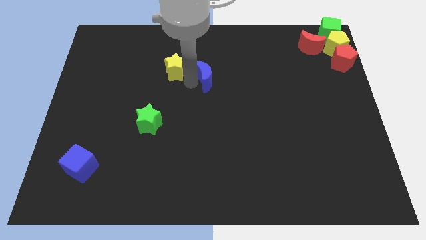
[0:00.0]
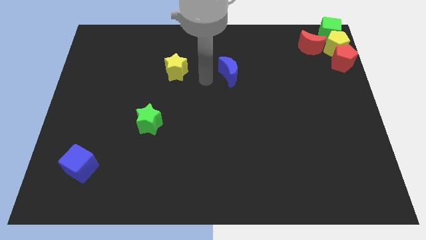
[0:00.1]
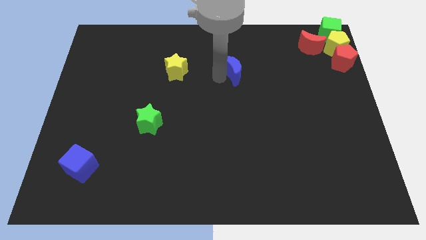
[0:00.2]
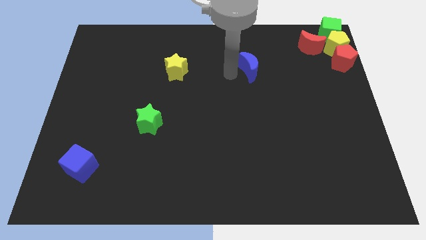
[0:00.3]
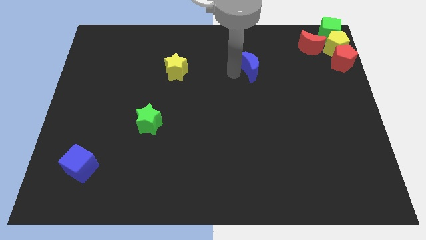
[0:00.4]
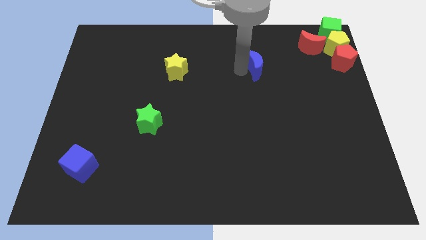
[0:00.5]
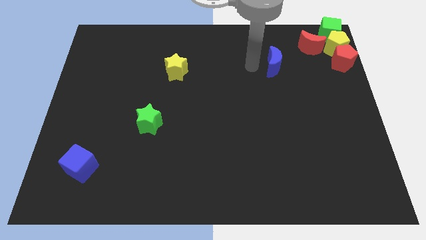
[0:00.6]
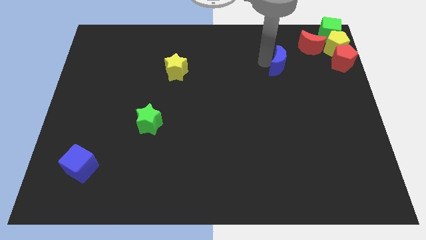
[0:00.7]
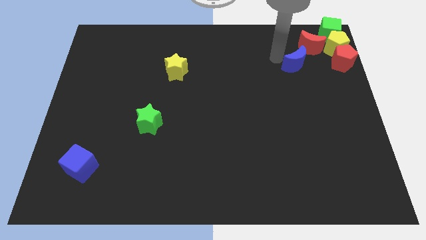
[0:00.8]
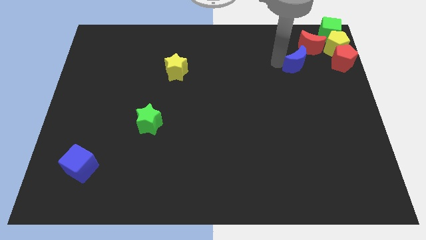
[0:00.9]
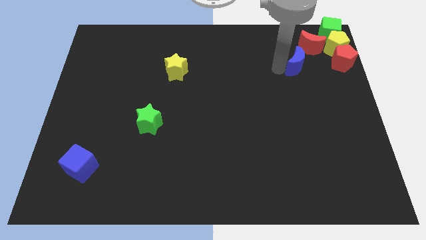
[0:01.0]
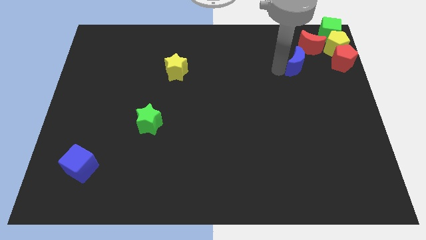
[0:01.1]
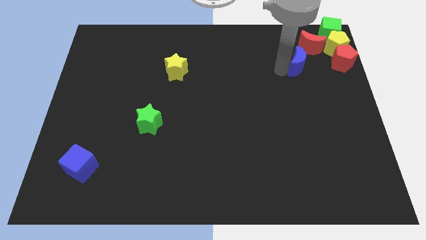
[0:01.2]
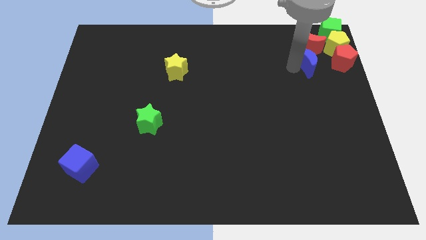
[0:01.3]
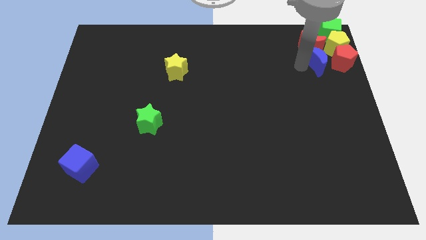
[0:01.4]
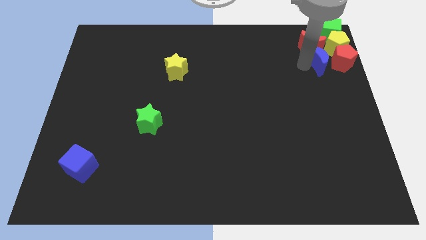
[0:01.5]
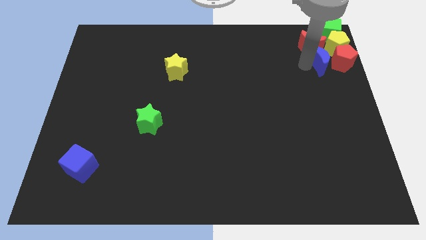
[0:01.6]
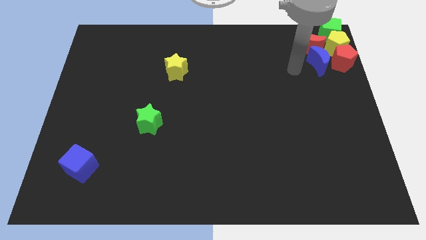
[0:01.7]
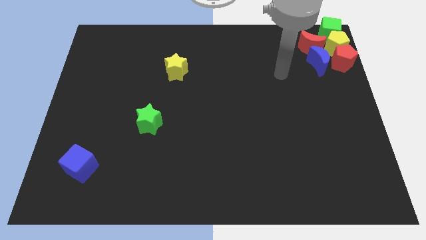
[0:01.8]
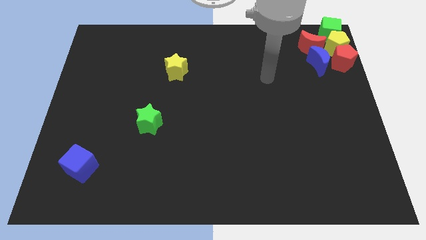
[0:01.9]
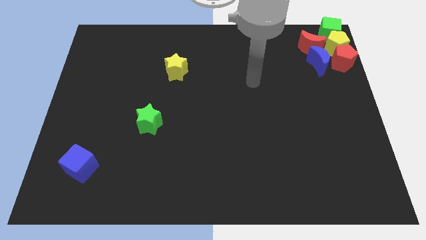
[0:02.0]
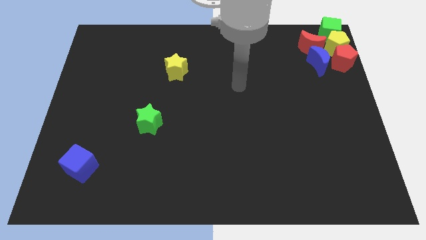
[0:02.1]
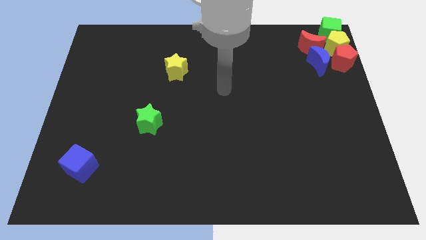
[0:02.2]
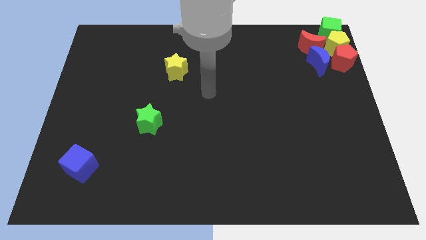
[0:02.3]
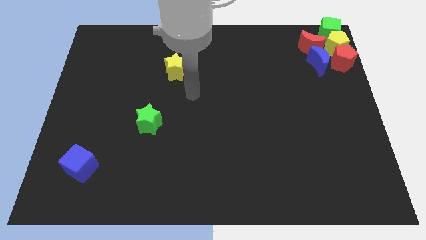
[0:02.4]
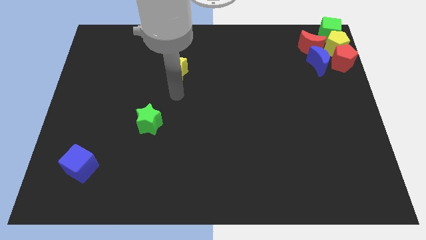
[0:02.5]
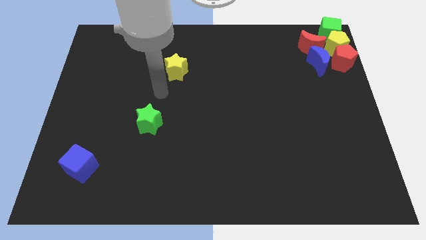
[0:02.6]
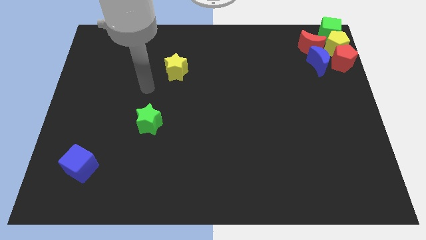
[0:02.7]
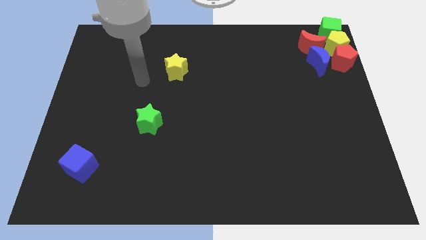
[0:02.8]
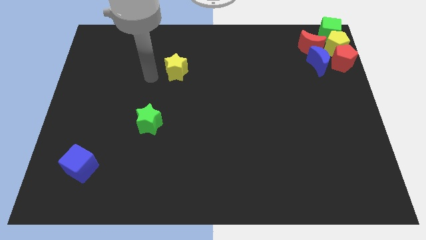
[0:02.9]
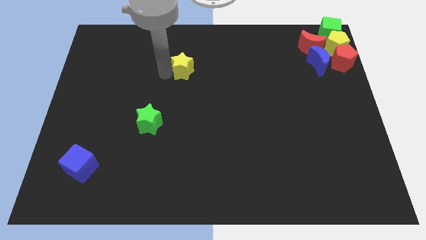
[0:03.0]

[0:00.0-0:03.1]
push the blue crescent below the red crescent

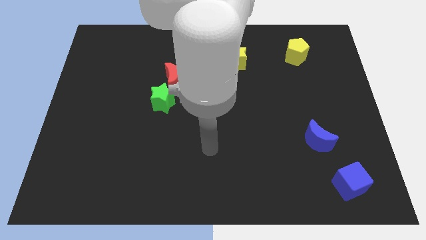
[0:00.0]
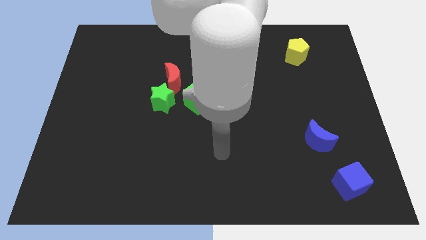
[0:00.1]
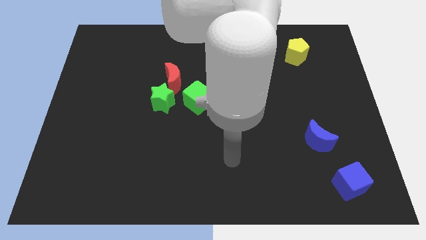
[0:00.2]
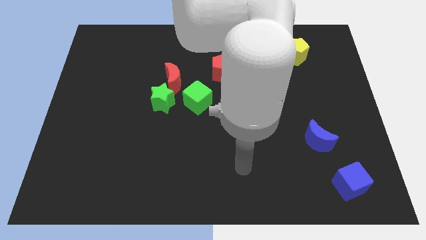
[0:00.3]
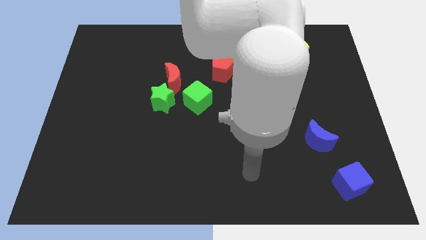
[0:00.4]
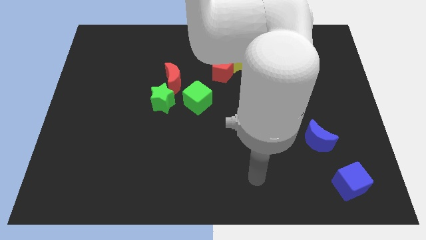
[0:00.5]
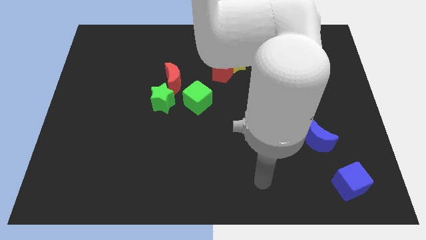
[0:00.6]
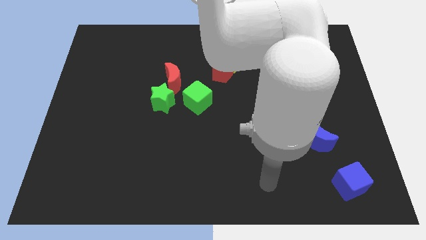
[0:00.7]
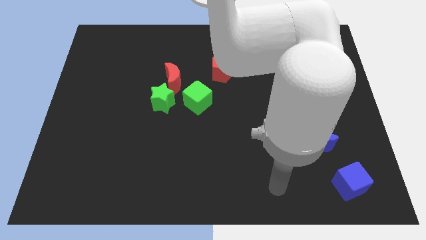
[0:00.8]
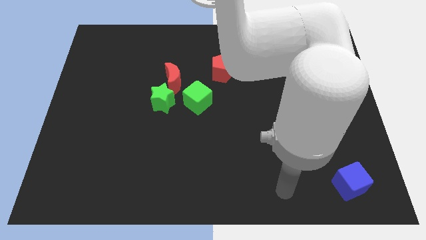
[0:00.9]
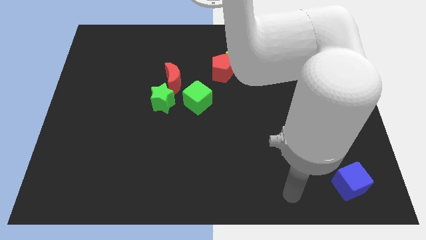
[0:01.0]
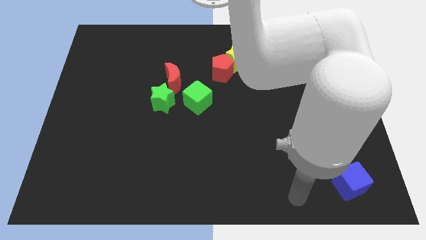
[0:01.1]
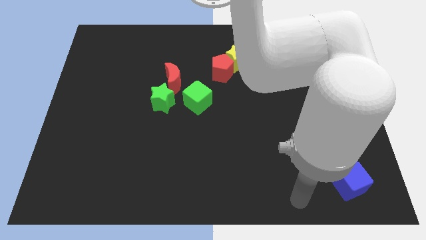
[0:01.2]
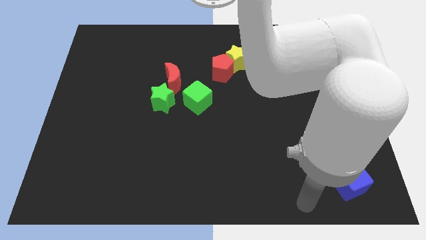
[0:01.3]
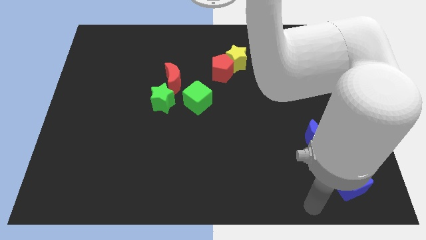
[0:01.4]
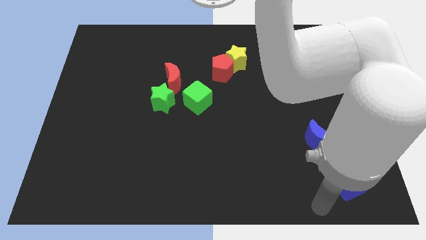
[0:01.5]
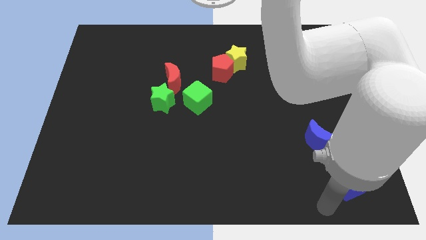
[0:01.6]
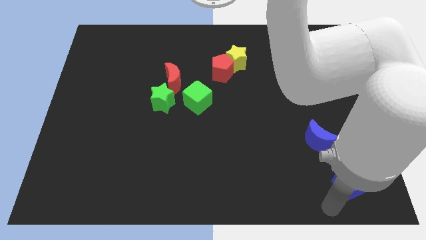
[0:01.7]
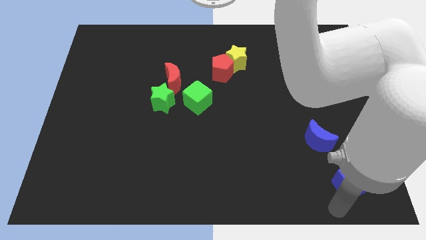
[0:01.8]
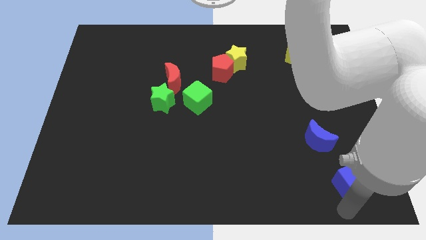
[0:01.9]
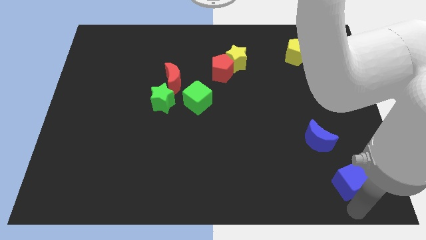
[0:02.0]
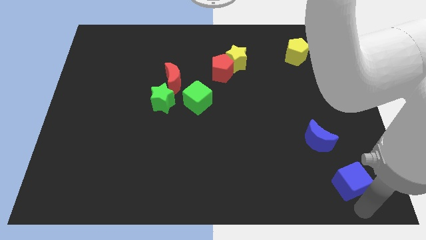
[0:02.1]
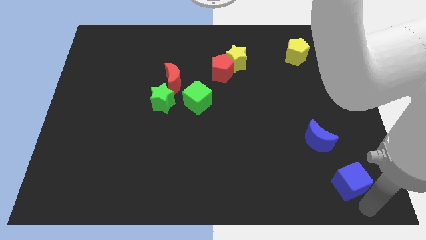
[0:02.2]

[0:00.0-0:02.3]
move your arm below to the blue cube

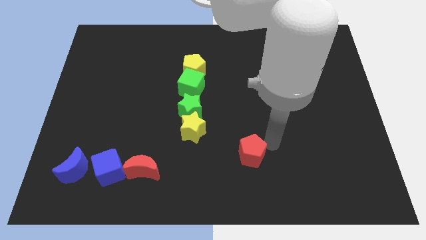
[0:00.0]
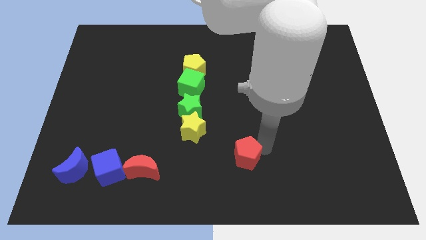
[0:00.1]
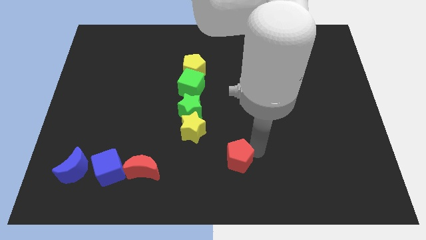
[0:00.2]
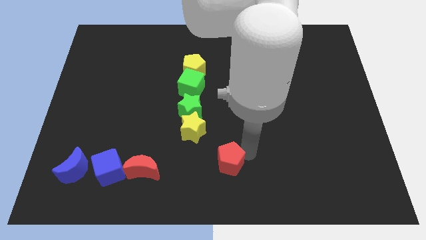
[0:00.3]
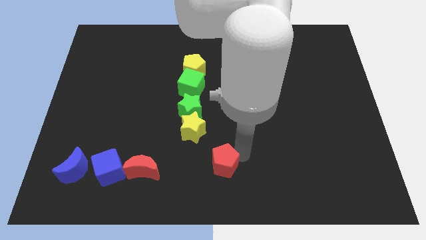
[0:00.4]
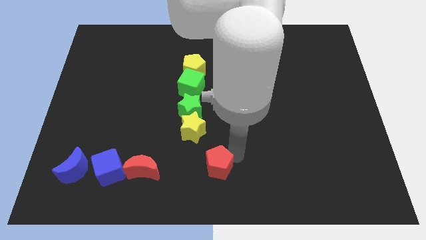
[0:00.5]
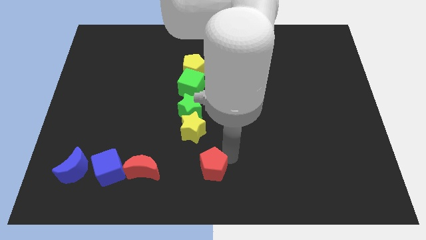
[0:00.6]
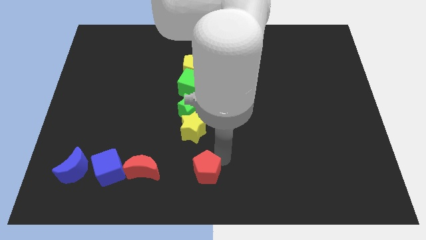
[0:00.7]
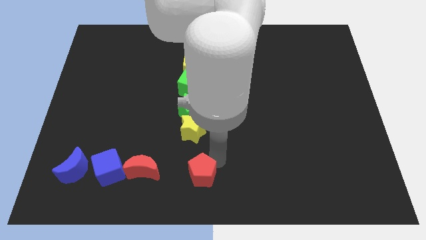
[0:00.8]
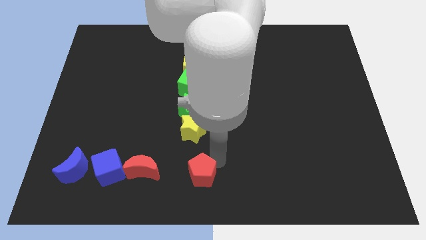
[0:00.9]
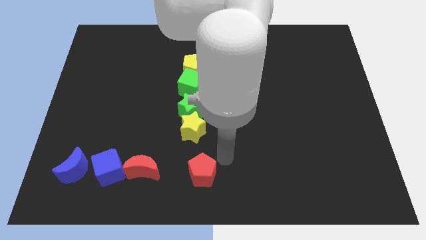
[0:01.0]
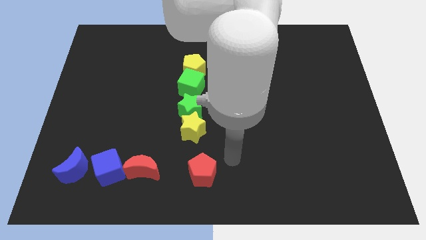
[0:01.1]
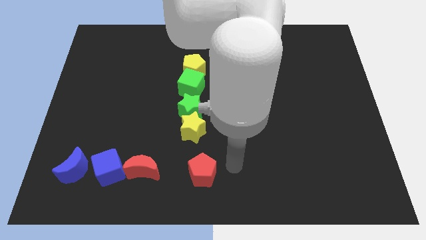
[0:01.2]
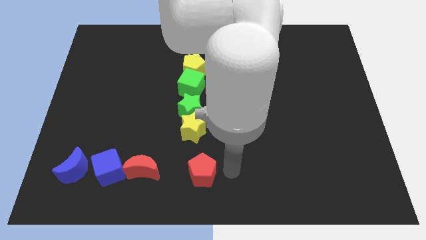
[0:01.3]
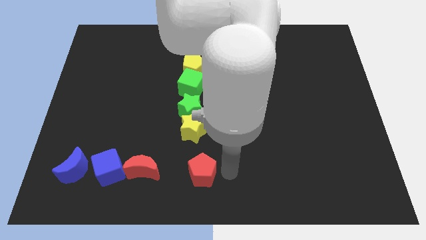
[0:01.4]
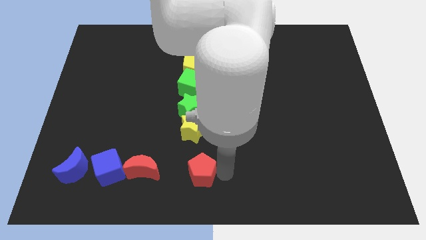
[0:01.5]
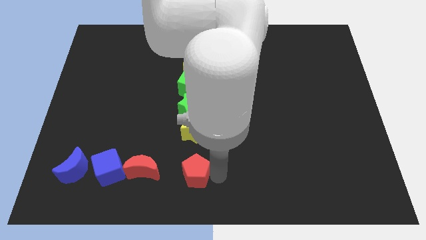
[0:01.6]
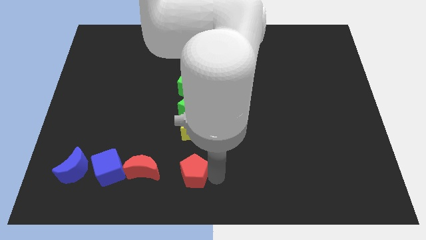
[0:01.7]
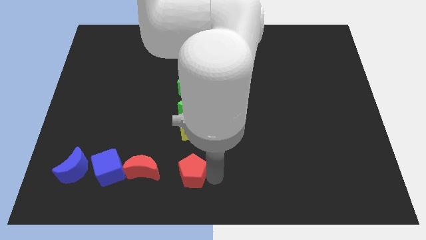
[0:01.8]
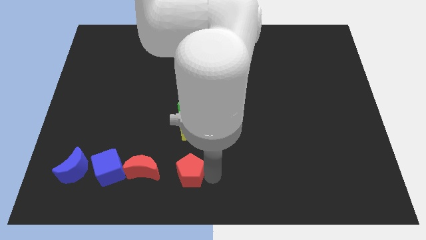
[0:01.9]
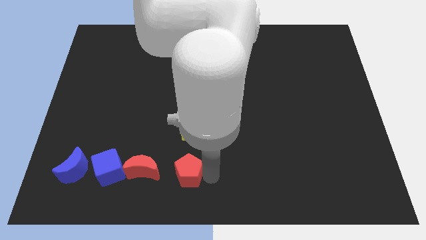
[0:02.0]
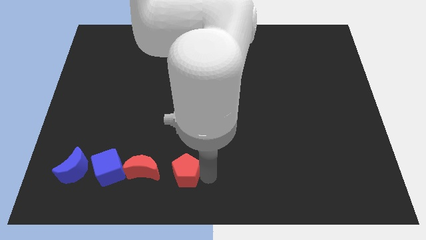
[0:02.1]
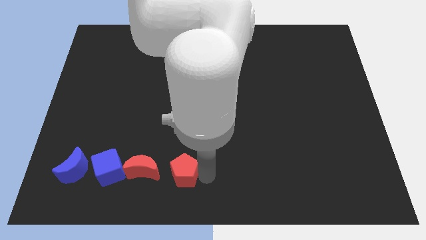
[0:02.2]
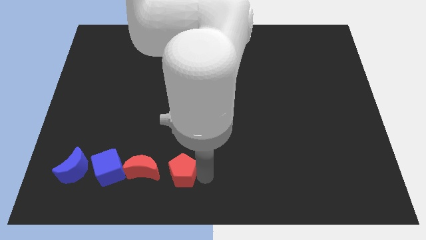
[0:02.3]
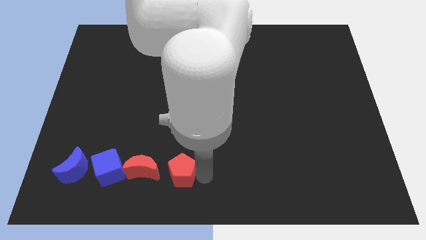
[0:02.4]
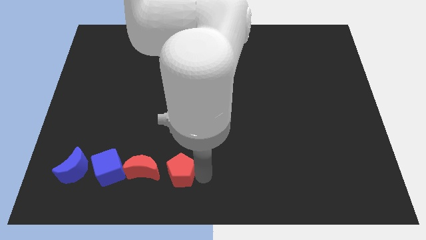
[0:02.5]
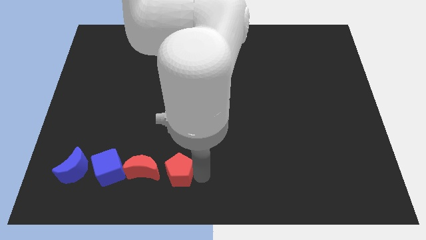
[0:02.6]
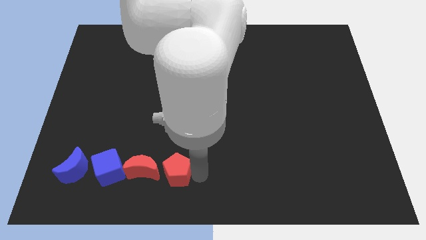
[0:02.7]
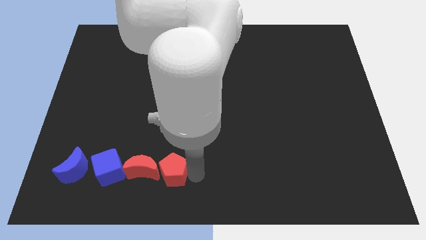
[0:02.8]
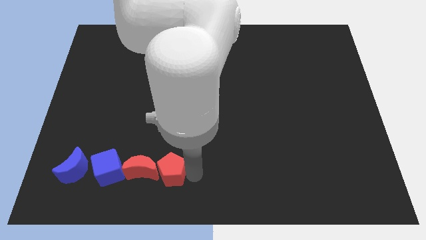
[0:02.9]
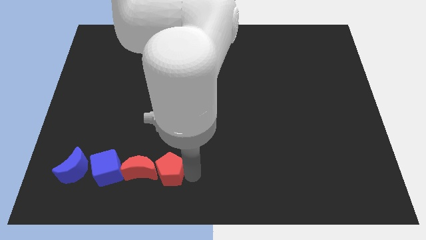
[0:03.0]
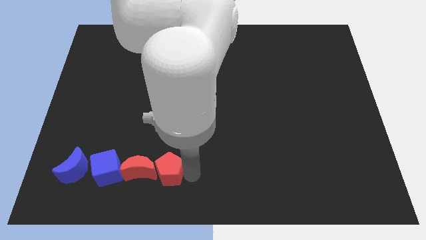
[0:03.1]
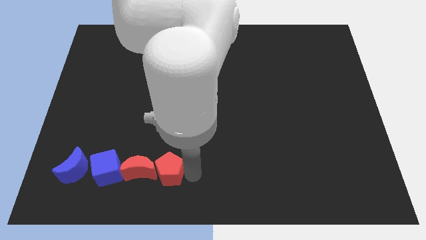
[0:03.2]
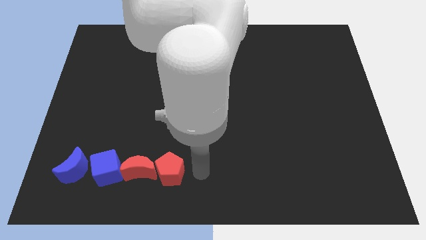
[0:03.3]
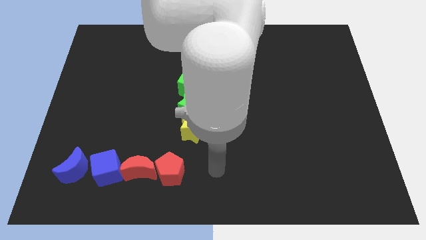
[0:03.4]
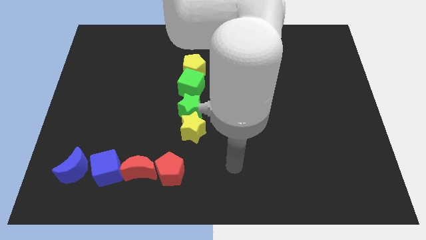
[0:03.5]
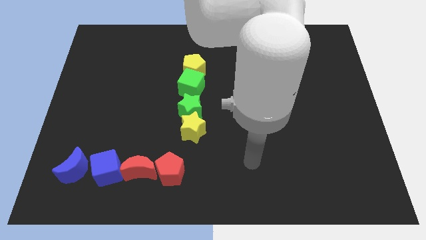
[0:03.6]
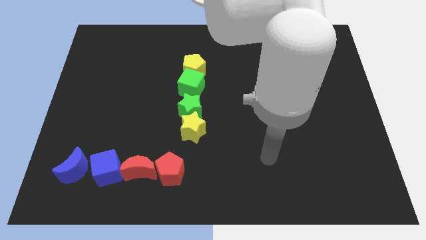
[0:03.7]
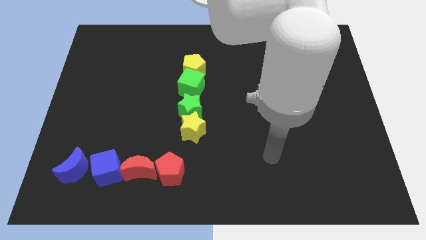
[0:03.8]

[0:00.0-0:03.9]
move the red pentagon and make a horizontal line
